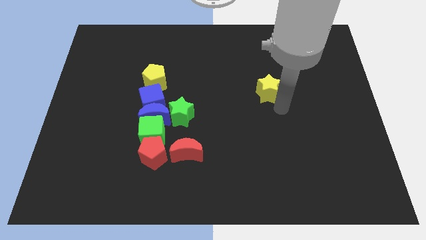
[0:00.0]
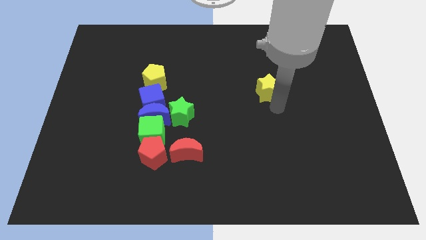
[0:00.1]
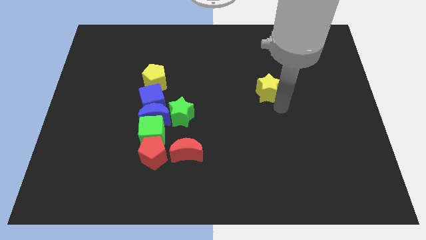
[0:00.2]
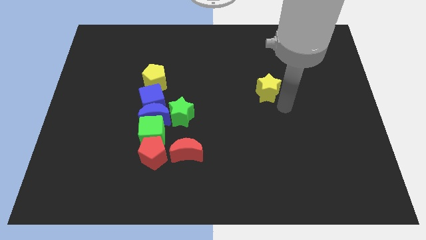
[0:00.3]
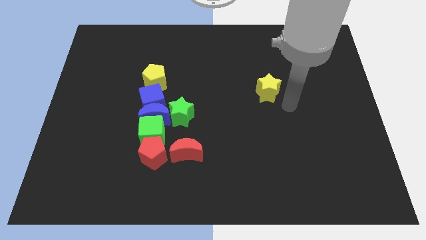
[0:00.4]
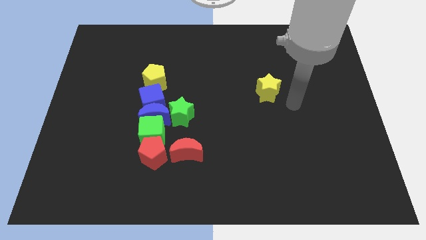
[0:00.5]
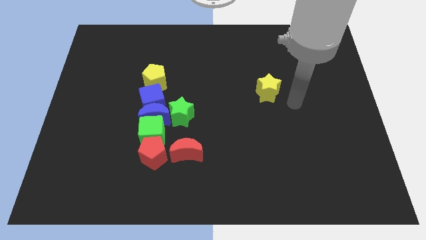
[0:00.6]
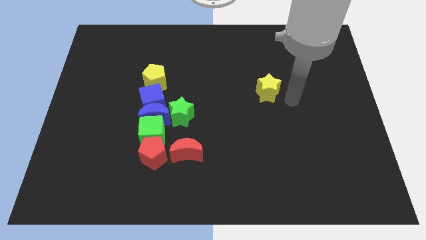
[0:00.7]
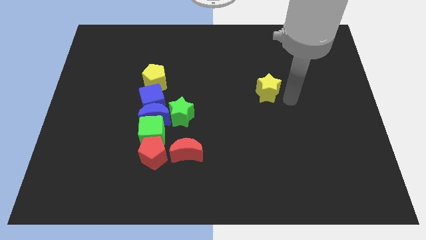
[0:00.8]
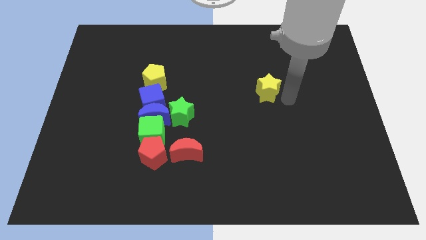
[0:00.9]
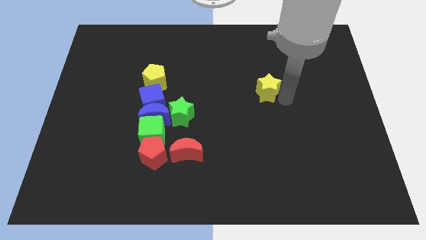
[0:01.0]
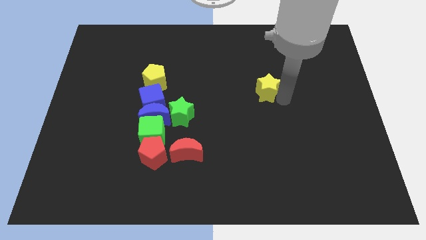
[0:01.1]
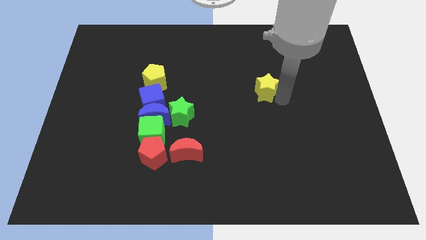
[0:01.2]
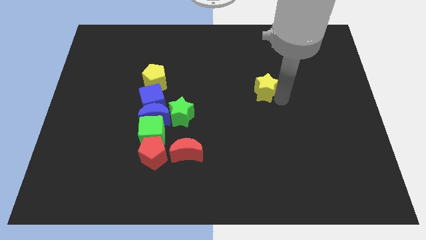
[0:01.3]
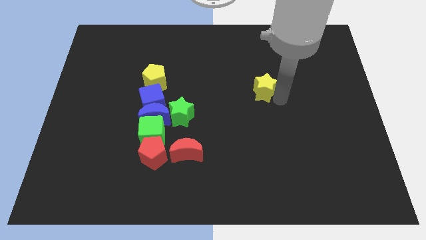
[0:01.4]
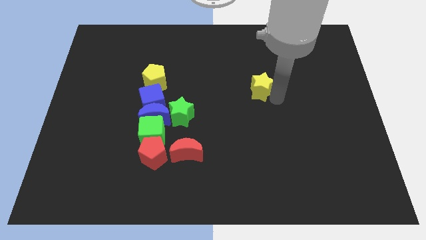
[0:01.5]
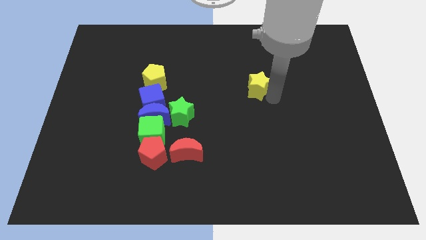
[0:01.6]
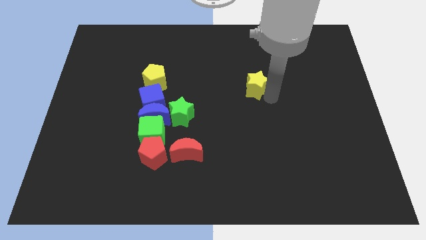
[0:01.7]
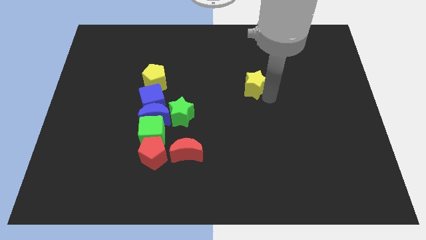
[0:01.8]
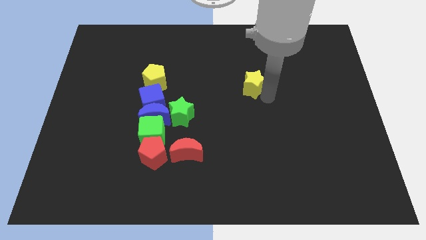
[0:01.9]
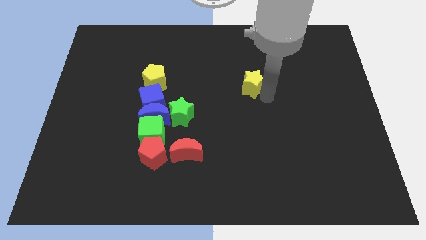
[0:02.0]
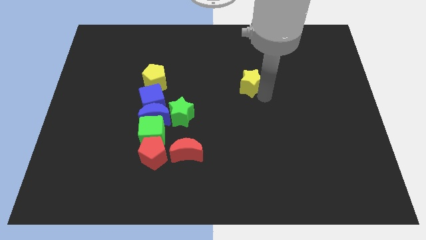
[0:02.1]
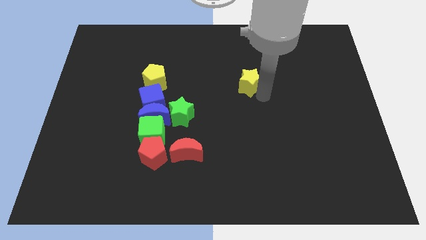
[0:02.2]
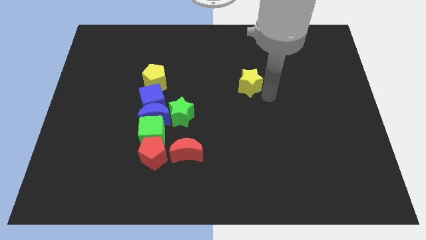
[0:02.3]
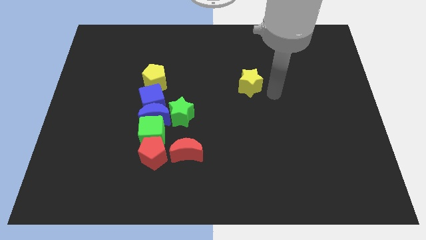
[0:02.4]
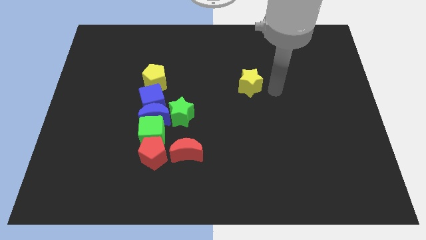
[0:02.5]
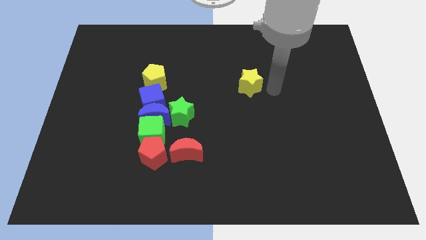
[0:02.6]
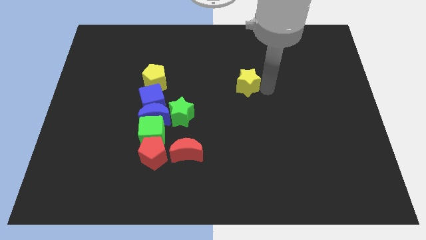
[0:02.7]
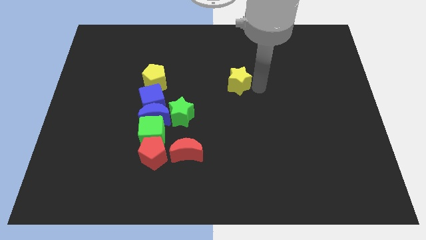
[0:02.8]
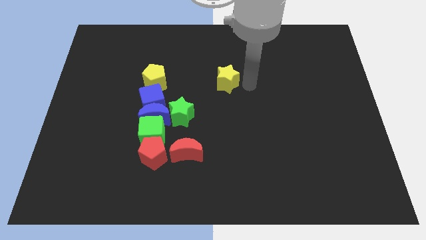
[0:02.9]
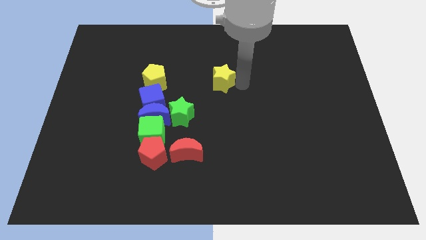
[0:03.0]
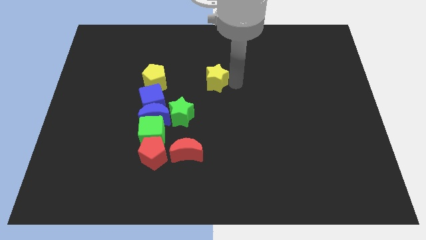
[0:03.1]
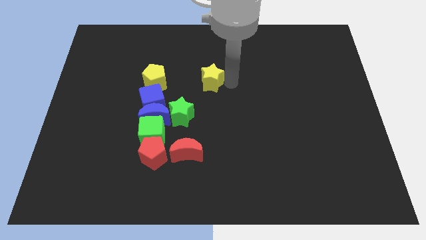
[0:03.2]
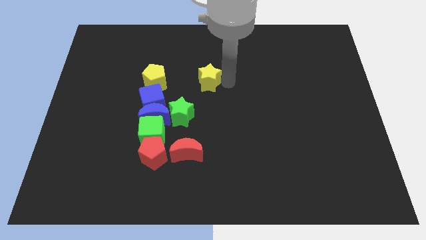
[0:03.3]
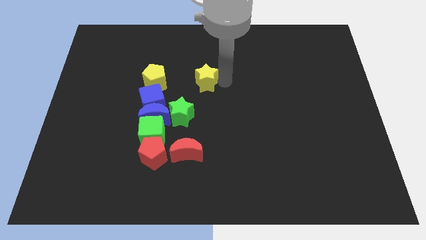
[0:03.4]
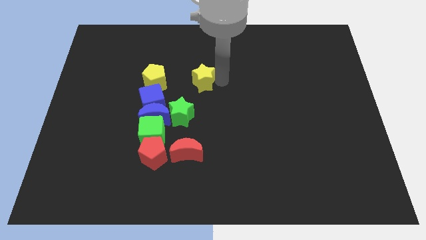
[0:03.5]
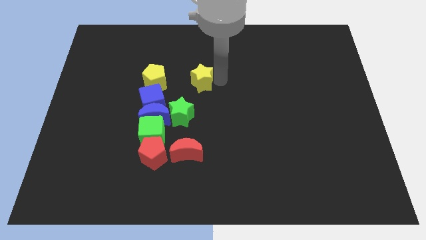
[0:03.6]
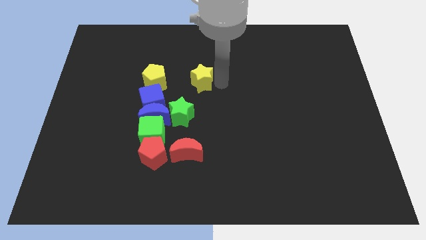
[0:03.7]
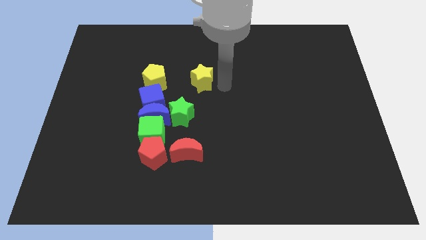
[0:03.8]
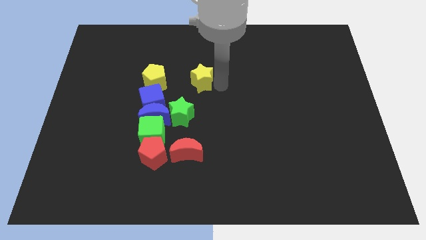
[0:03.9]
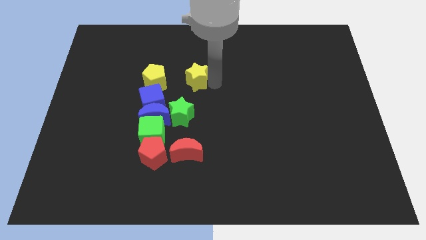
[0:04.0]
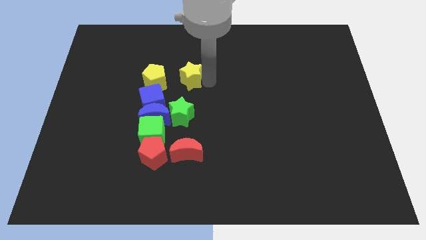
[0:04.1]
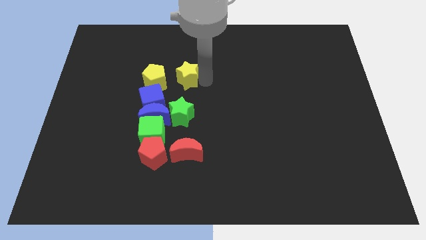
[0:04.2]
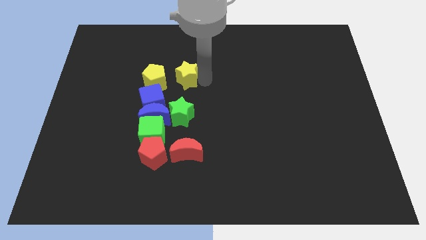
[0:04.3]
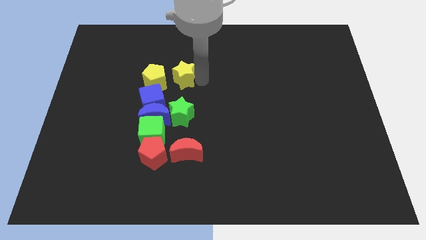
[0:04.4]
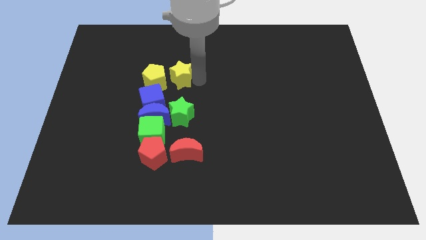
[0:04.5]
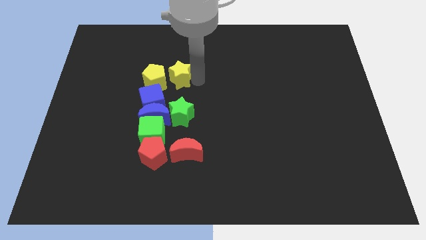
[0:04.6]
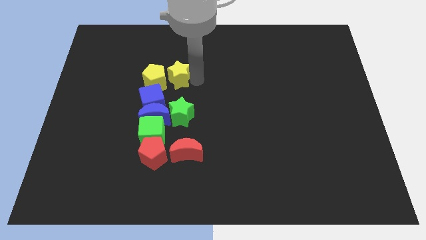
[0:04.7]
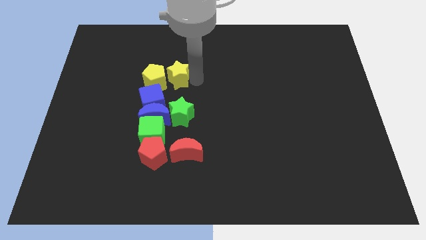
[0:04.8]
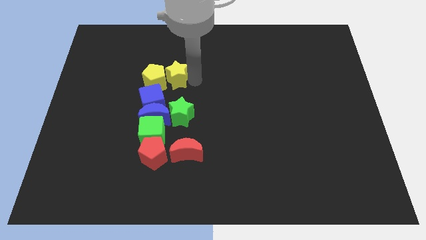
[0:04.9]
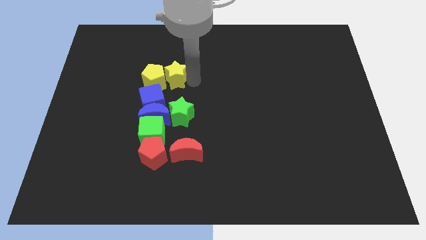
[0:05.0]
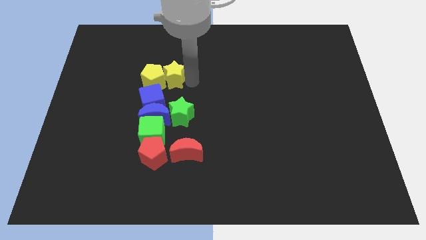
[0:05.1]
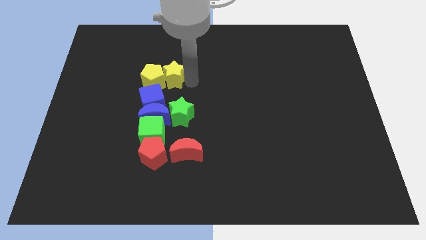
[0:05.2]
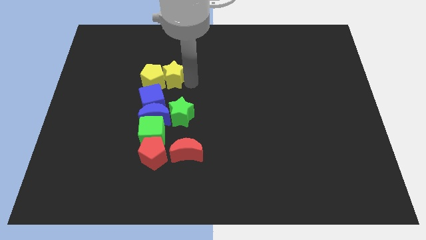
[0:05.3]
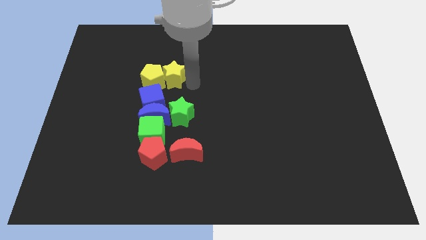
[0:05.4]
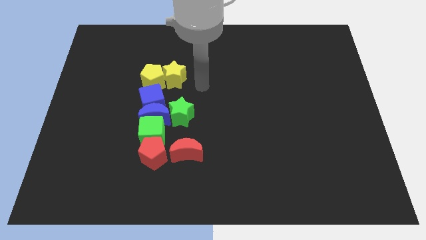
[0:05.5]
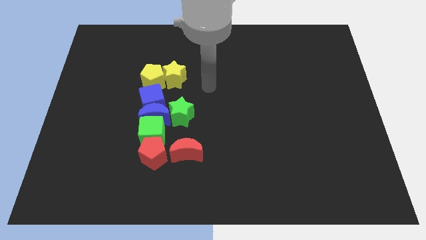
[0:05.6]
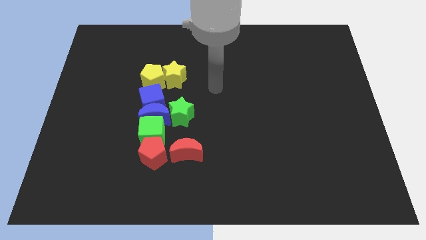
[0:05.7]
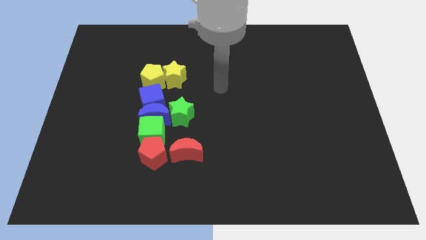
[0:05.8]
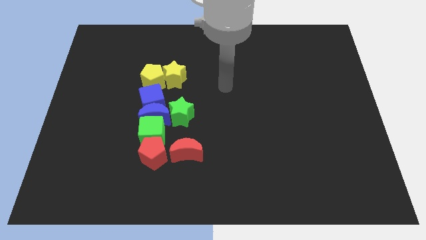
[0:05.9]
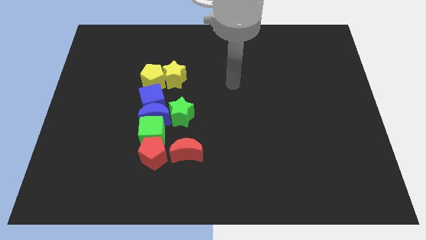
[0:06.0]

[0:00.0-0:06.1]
move the yellow star into the yellow pentagon

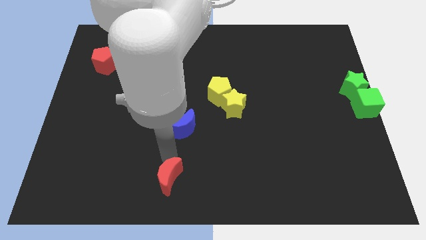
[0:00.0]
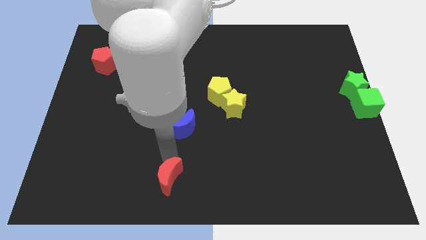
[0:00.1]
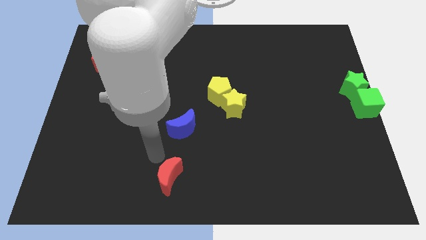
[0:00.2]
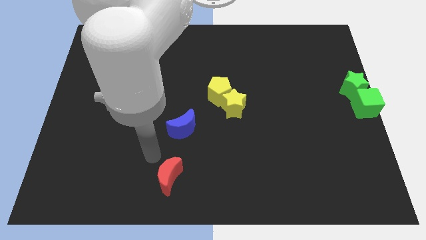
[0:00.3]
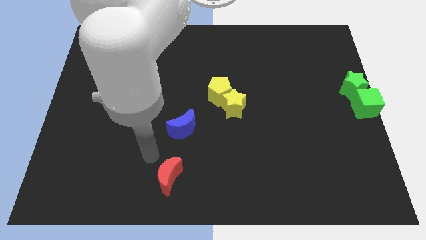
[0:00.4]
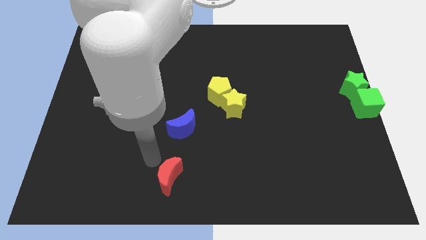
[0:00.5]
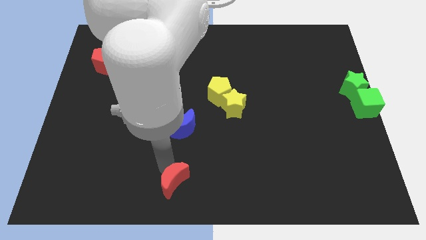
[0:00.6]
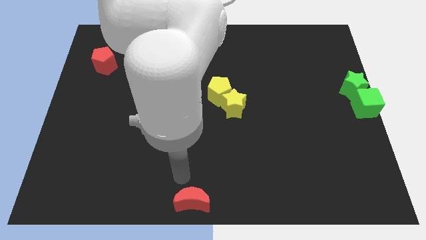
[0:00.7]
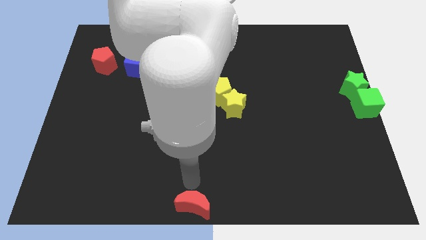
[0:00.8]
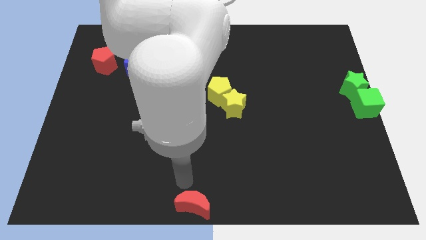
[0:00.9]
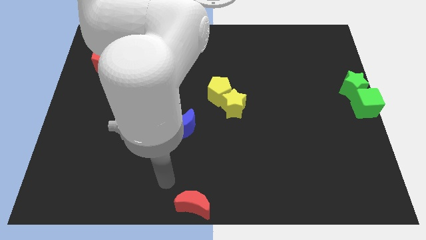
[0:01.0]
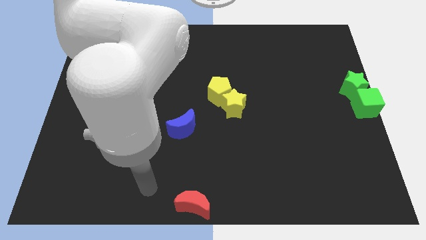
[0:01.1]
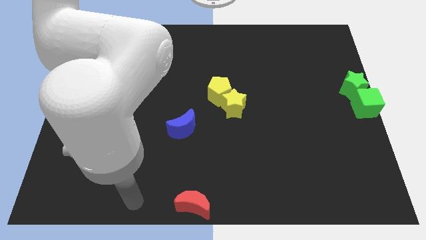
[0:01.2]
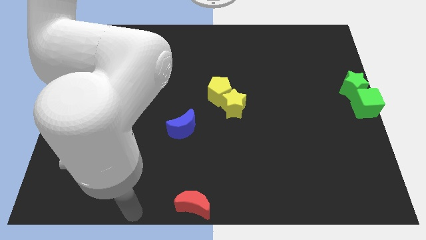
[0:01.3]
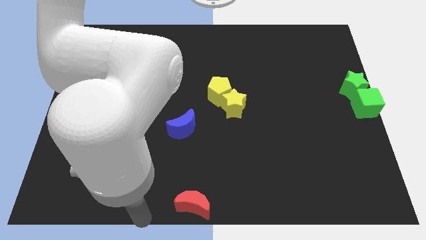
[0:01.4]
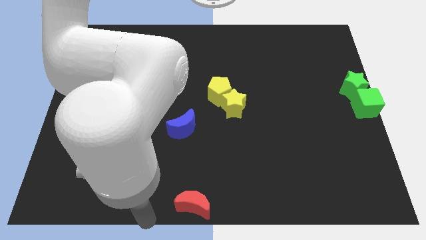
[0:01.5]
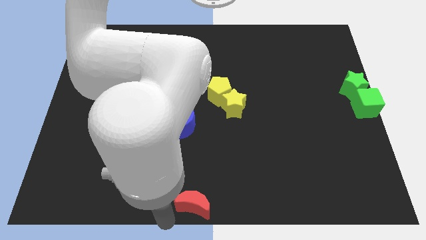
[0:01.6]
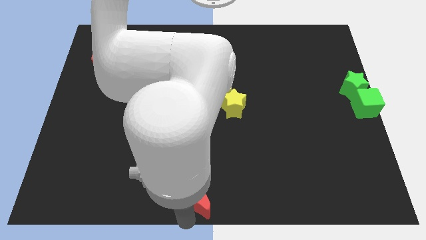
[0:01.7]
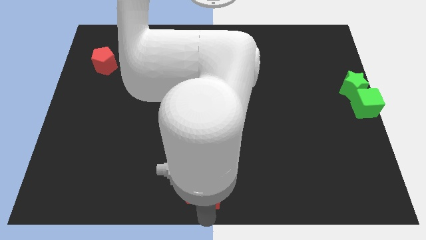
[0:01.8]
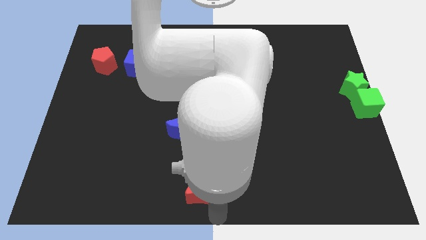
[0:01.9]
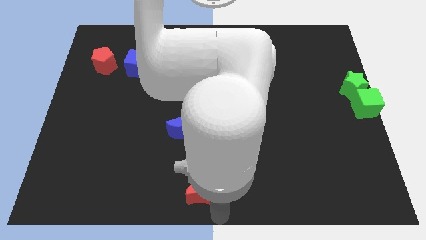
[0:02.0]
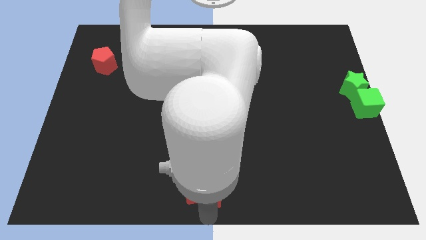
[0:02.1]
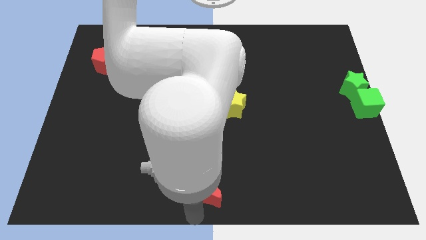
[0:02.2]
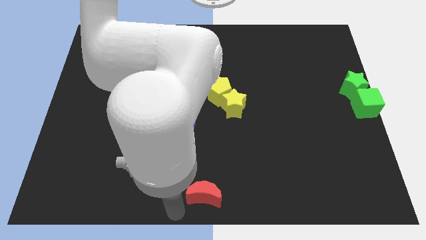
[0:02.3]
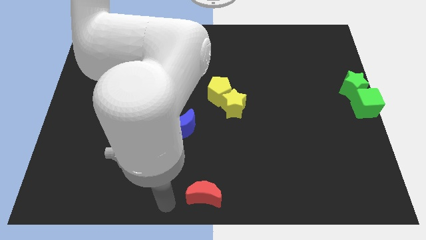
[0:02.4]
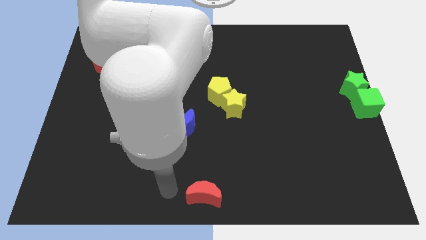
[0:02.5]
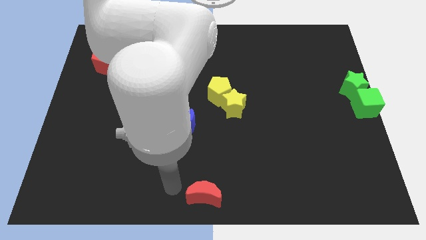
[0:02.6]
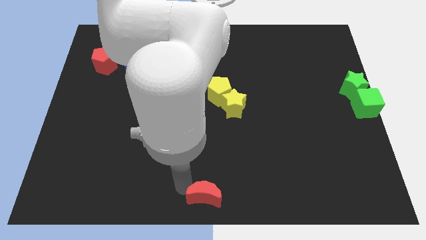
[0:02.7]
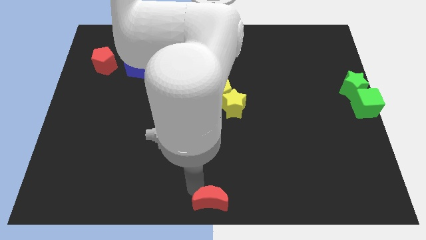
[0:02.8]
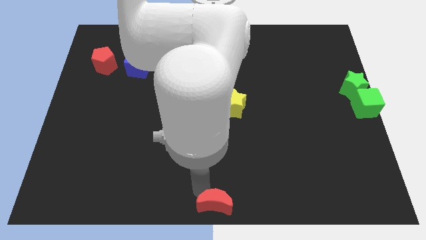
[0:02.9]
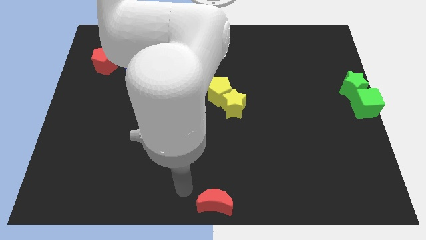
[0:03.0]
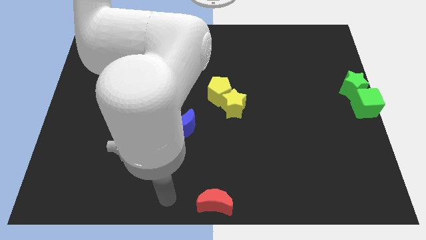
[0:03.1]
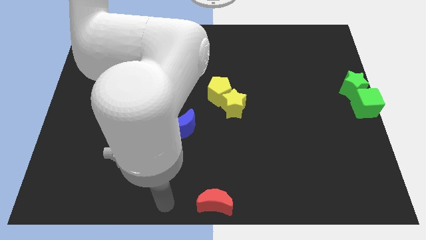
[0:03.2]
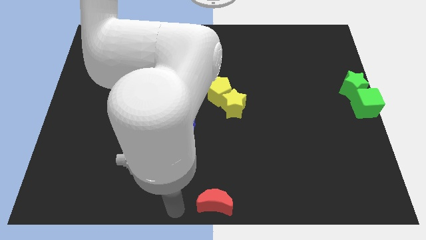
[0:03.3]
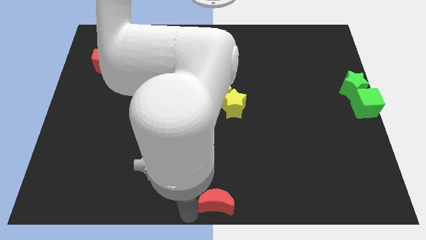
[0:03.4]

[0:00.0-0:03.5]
push the red crescent at the bottom center of the table
